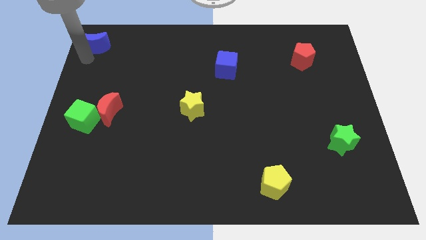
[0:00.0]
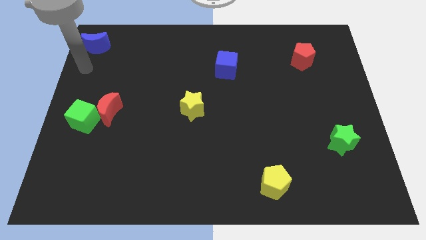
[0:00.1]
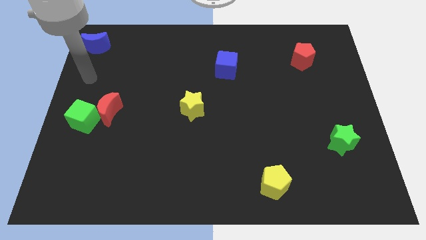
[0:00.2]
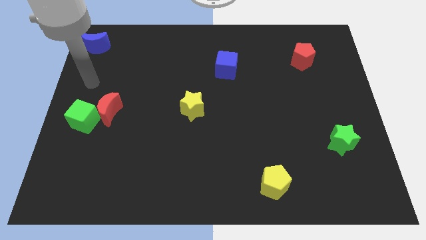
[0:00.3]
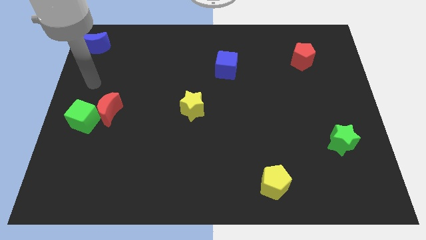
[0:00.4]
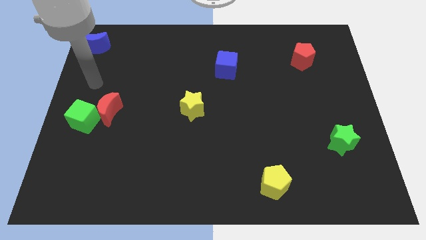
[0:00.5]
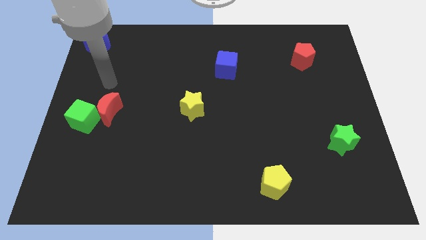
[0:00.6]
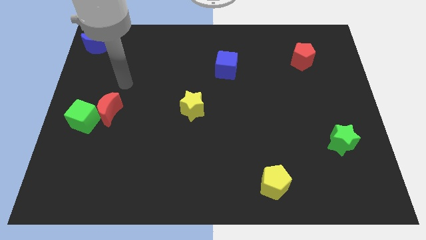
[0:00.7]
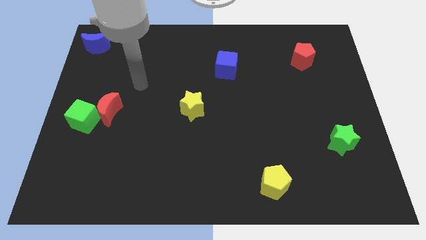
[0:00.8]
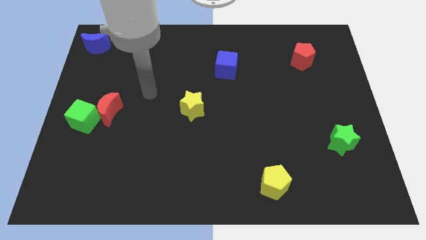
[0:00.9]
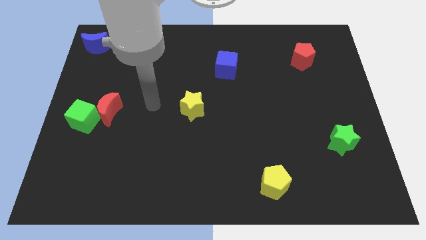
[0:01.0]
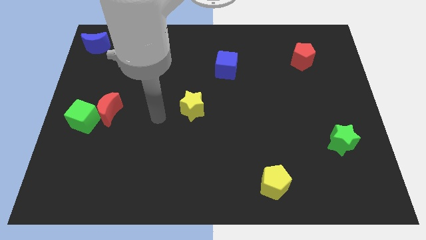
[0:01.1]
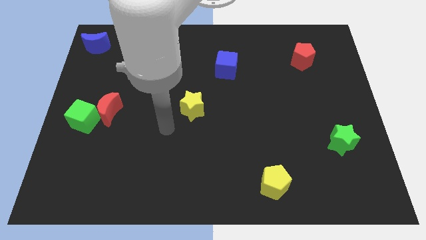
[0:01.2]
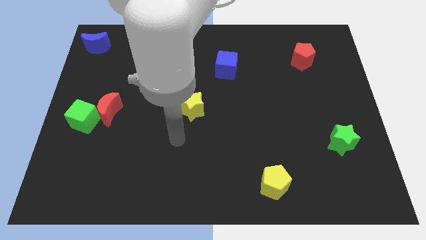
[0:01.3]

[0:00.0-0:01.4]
move your arm away from the blue crescent

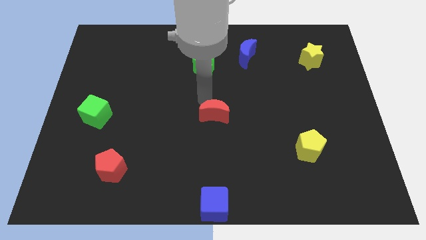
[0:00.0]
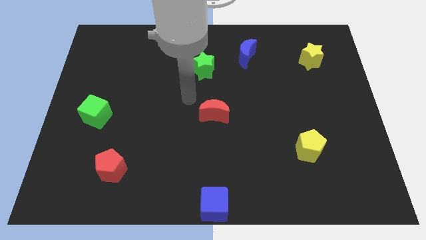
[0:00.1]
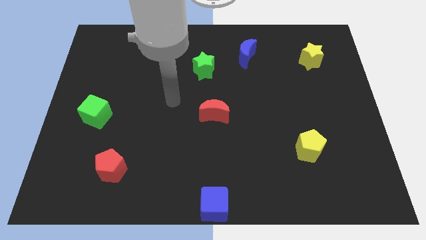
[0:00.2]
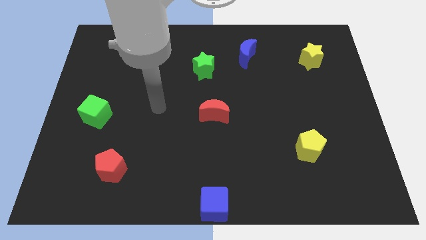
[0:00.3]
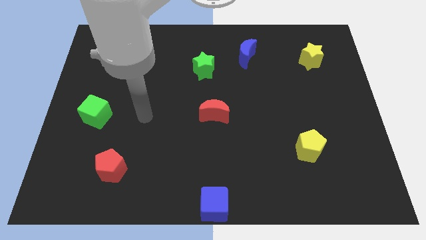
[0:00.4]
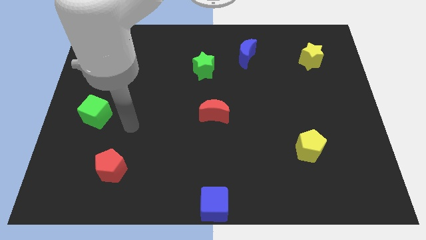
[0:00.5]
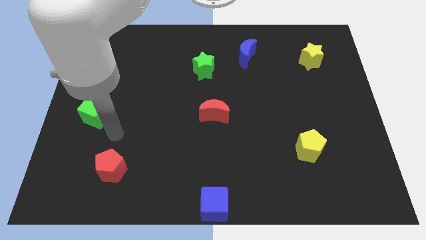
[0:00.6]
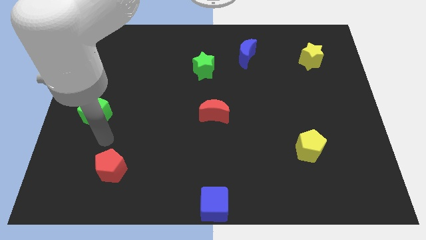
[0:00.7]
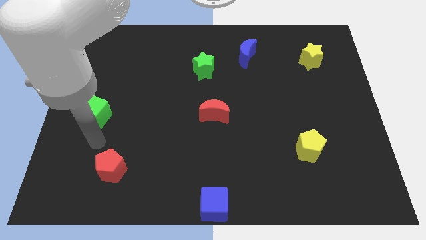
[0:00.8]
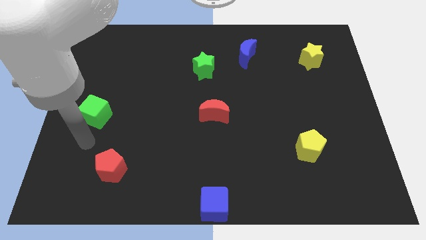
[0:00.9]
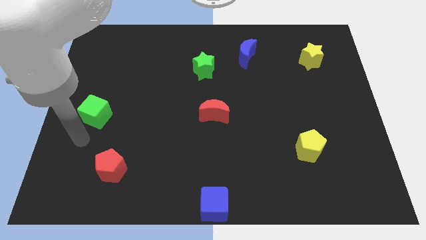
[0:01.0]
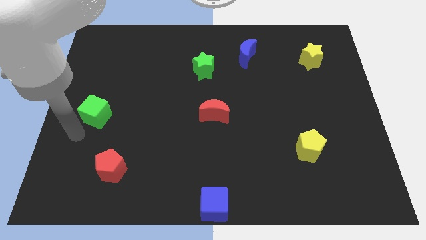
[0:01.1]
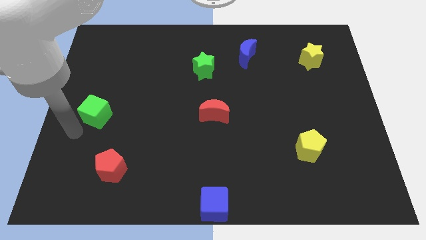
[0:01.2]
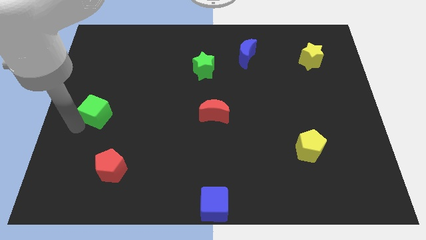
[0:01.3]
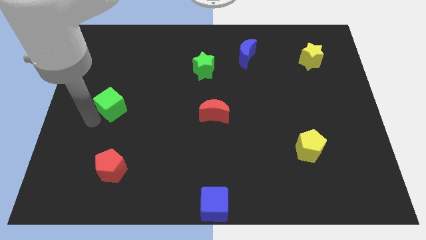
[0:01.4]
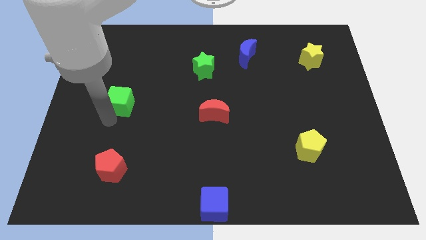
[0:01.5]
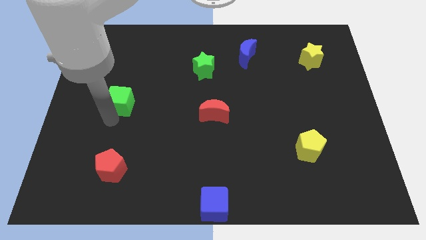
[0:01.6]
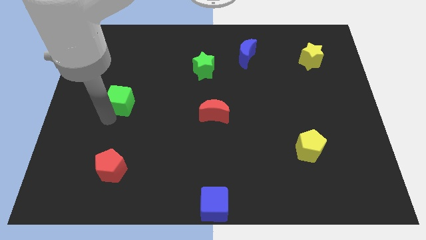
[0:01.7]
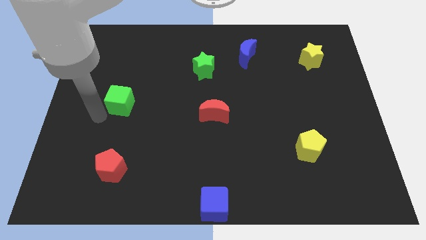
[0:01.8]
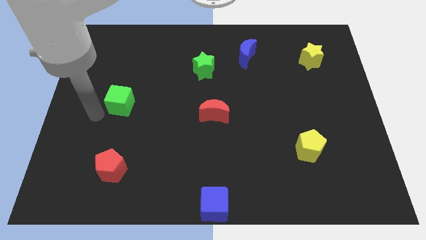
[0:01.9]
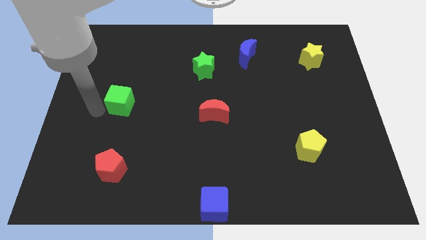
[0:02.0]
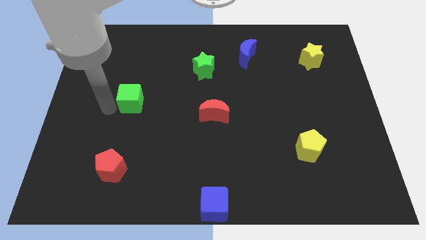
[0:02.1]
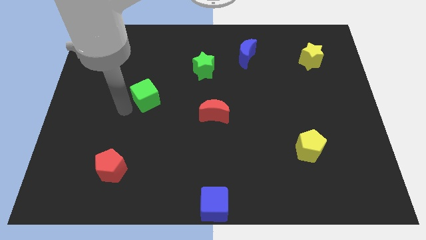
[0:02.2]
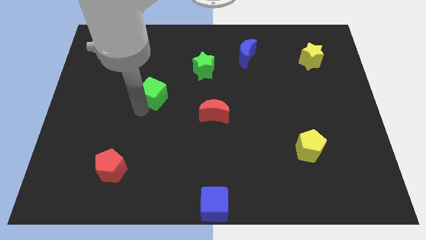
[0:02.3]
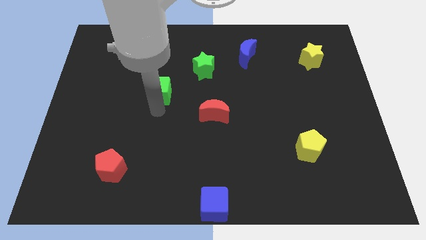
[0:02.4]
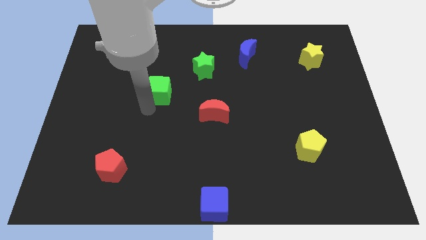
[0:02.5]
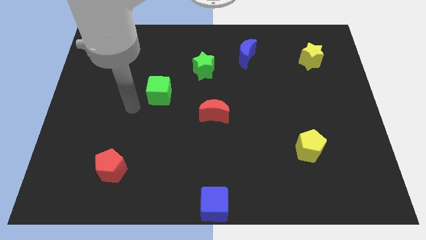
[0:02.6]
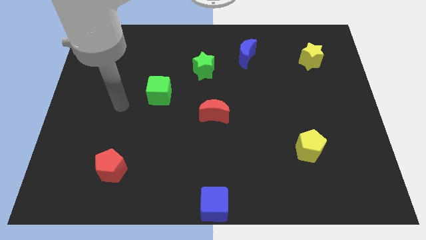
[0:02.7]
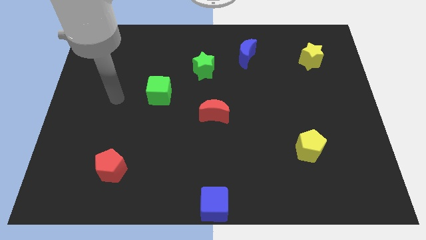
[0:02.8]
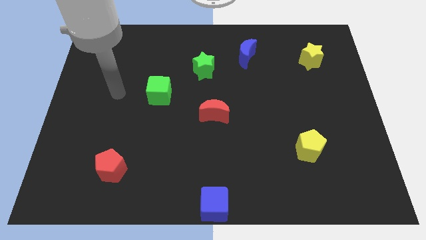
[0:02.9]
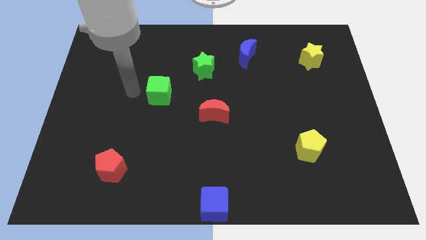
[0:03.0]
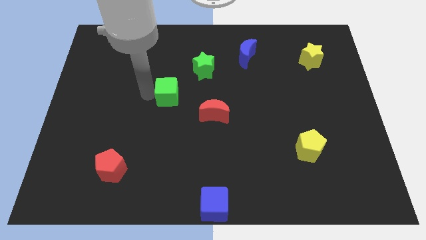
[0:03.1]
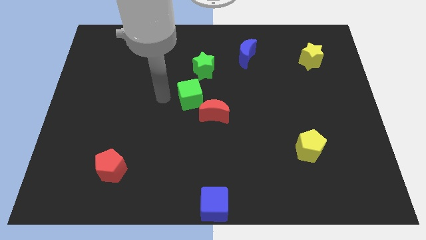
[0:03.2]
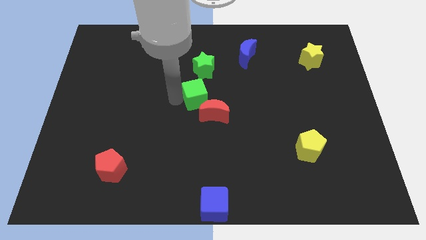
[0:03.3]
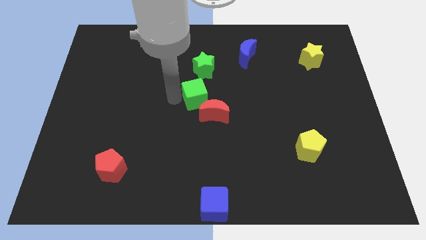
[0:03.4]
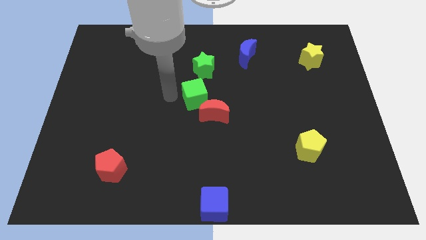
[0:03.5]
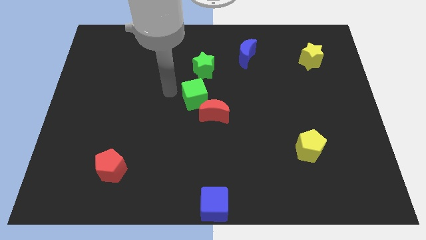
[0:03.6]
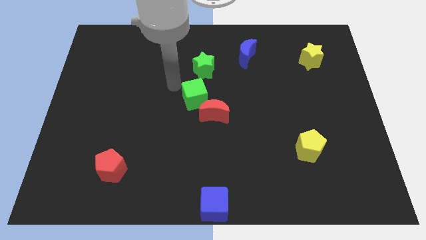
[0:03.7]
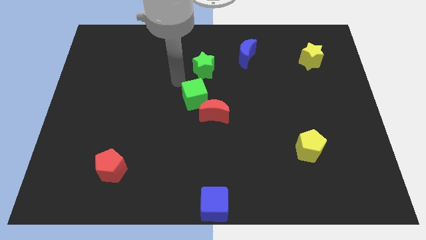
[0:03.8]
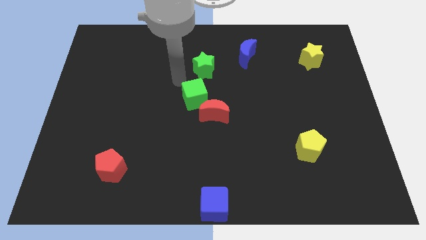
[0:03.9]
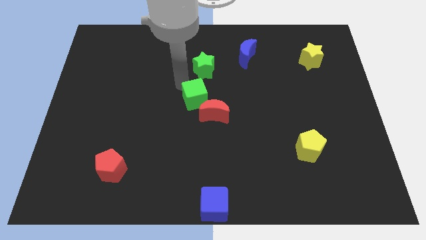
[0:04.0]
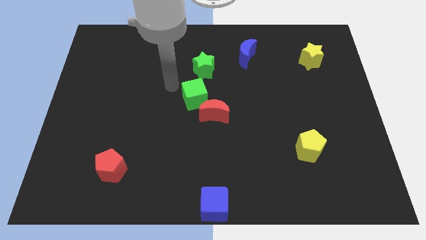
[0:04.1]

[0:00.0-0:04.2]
move away from the red moon

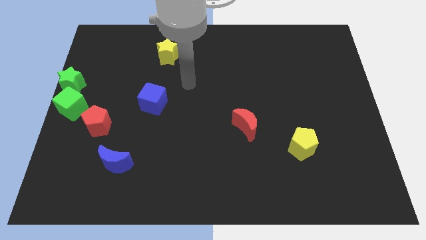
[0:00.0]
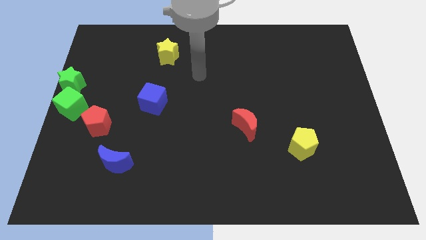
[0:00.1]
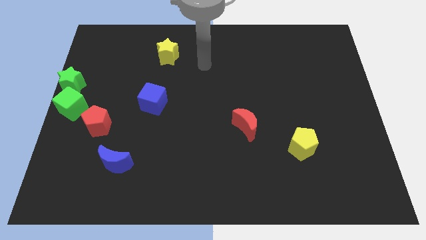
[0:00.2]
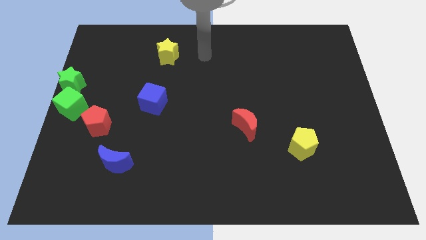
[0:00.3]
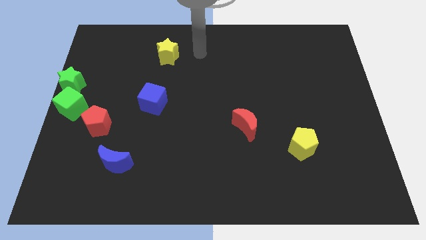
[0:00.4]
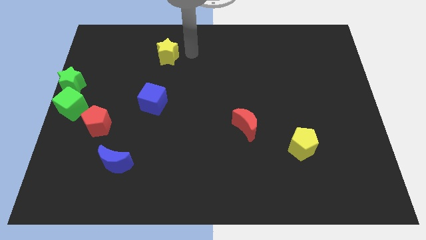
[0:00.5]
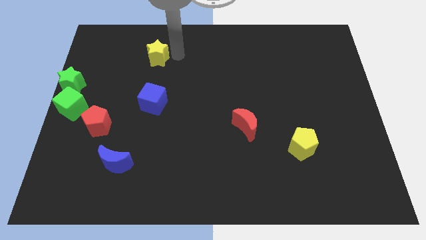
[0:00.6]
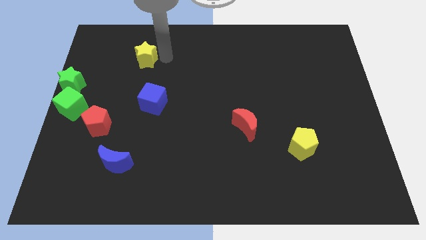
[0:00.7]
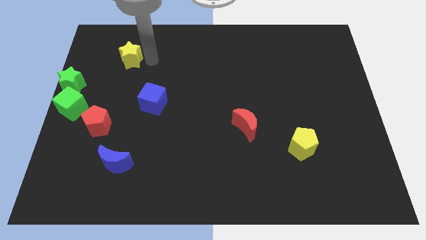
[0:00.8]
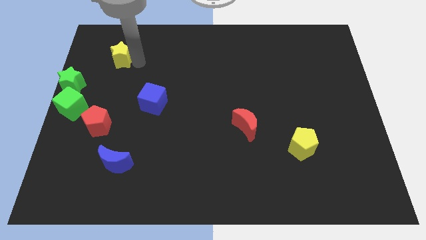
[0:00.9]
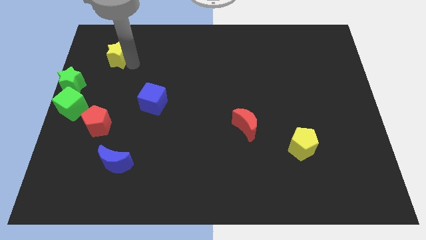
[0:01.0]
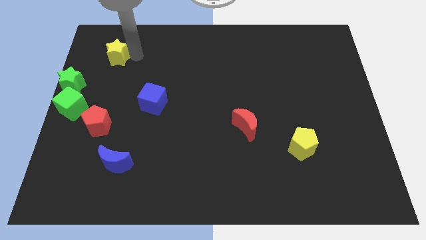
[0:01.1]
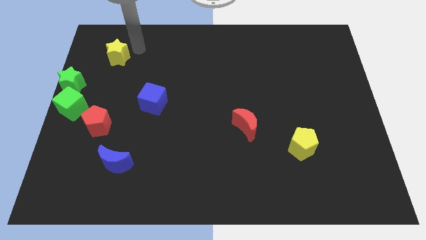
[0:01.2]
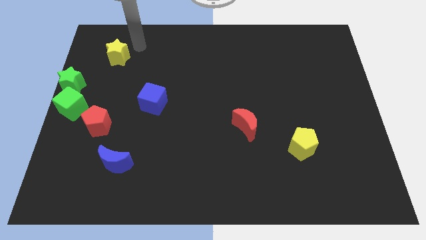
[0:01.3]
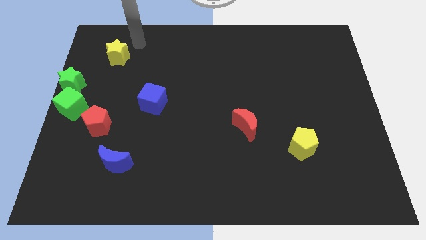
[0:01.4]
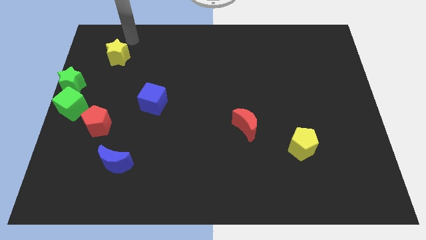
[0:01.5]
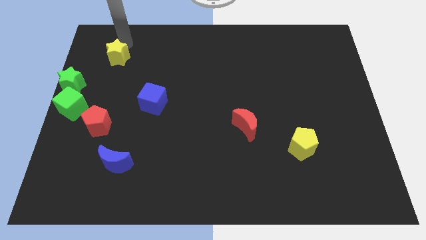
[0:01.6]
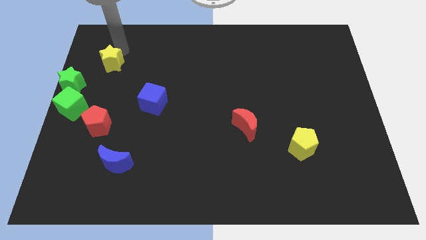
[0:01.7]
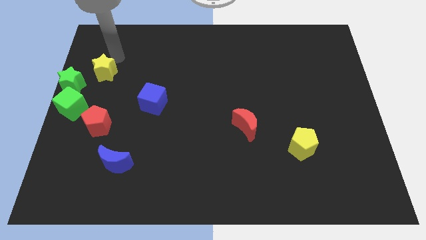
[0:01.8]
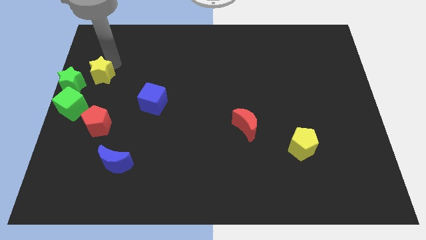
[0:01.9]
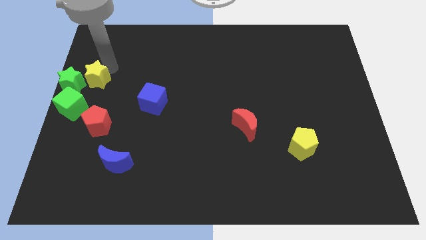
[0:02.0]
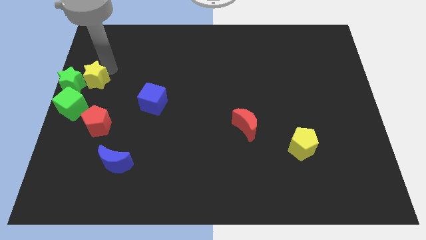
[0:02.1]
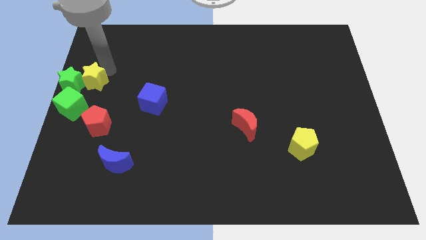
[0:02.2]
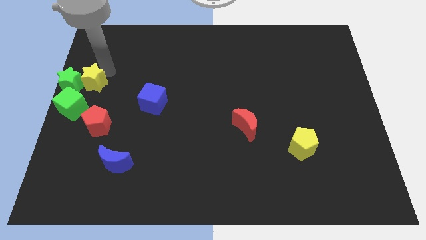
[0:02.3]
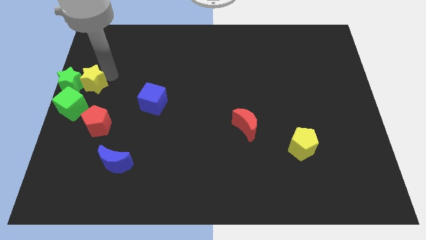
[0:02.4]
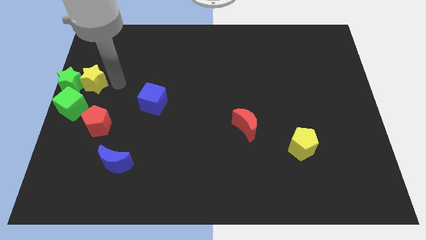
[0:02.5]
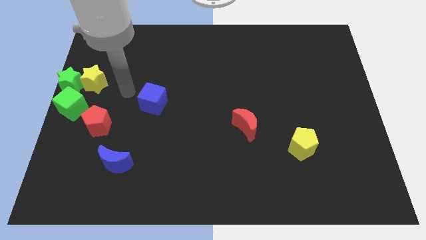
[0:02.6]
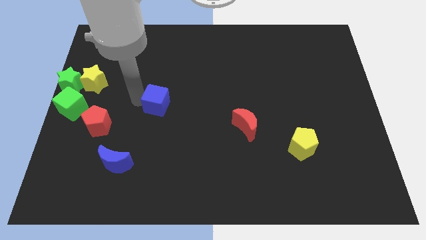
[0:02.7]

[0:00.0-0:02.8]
push the yellow star into the green star

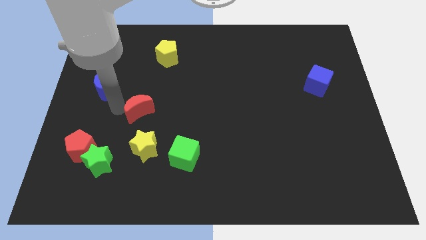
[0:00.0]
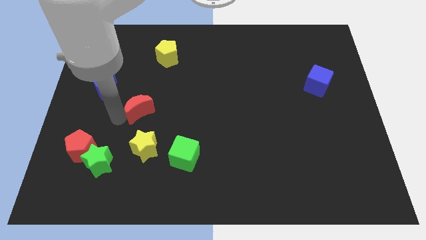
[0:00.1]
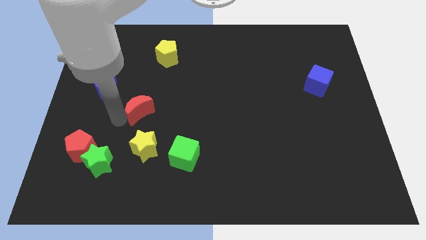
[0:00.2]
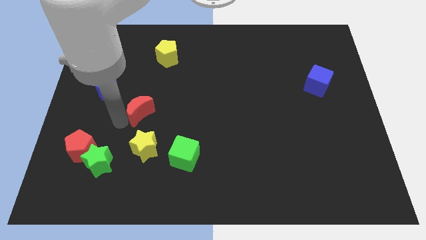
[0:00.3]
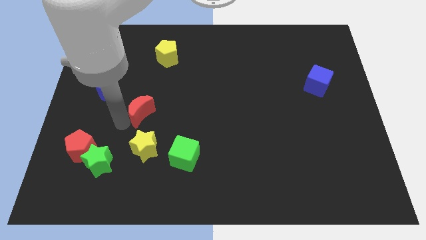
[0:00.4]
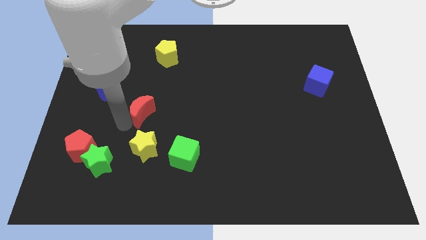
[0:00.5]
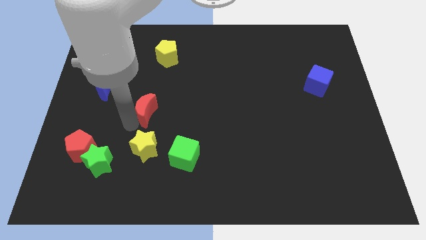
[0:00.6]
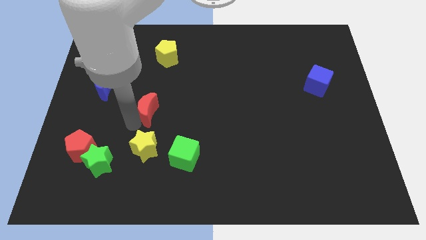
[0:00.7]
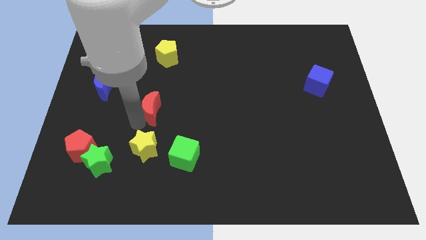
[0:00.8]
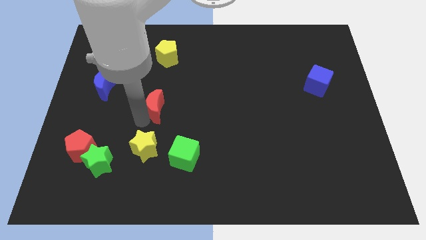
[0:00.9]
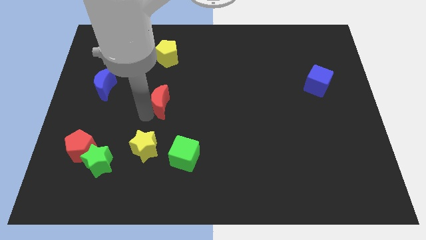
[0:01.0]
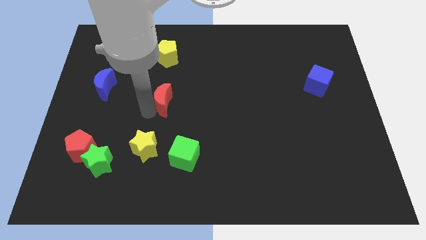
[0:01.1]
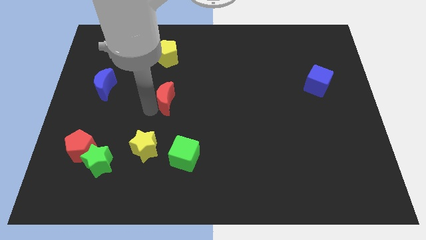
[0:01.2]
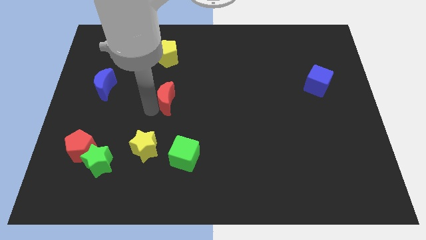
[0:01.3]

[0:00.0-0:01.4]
place red moon towards the center of the board
